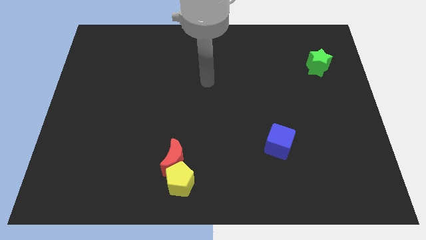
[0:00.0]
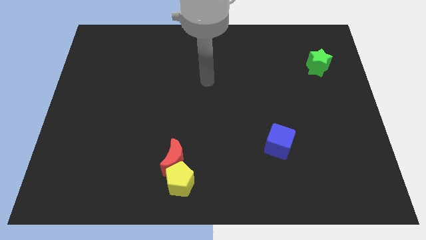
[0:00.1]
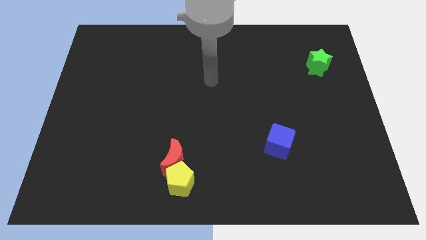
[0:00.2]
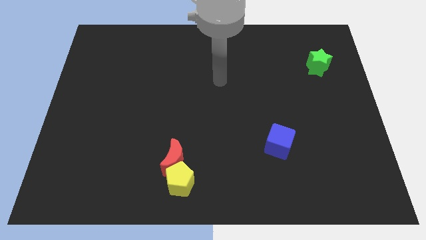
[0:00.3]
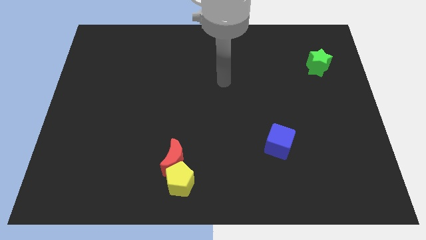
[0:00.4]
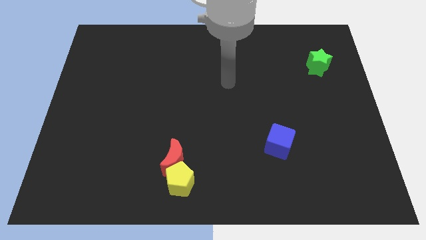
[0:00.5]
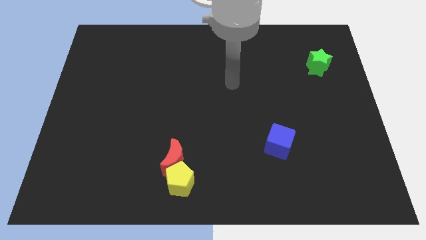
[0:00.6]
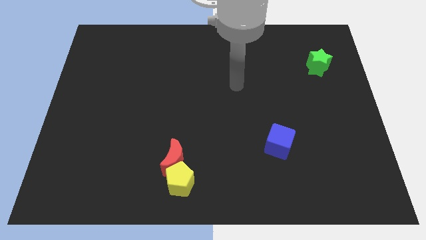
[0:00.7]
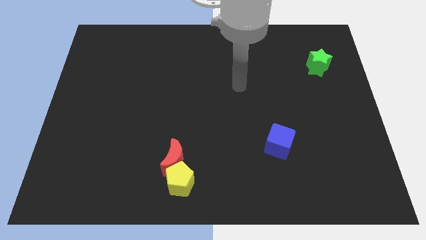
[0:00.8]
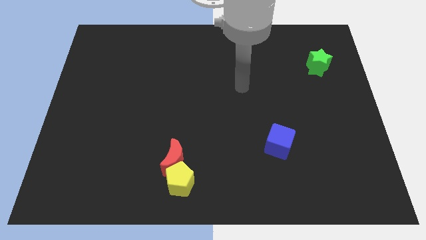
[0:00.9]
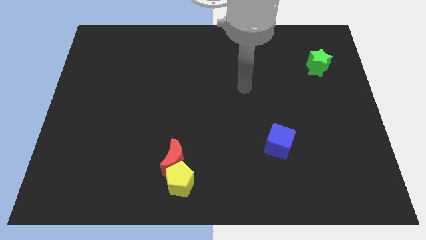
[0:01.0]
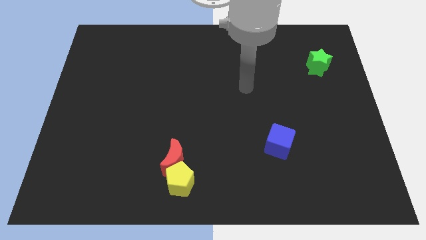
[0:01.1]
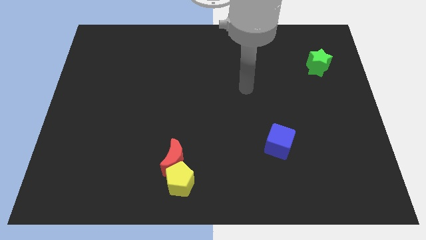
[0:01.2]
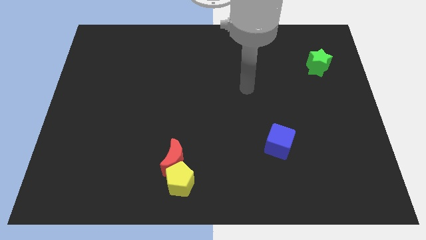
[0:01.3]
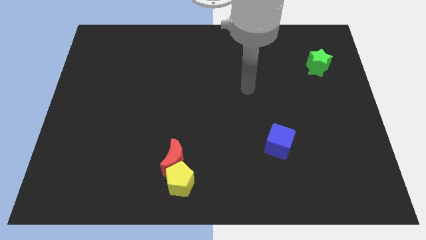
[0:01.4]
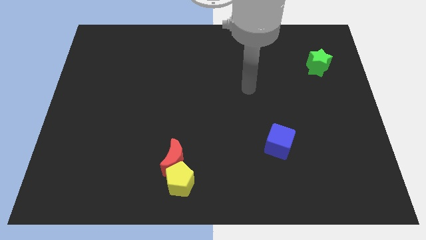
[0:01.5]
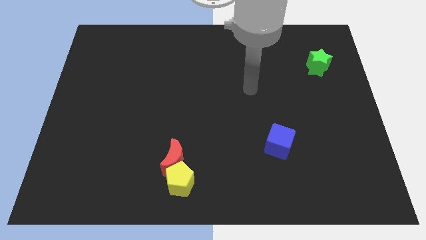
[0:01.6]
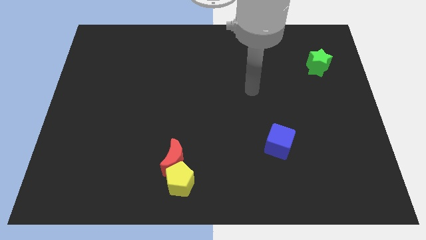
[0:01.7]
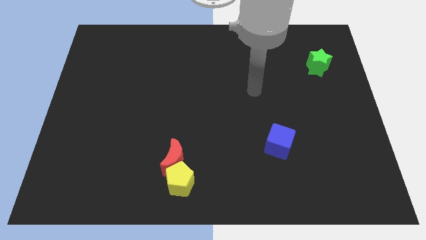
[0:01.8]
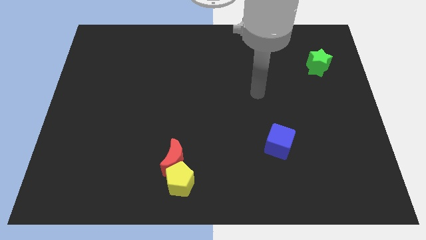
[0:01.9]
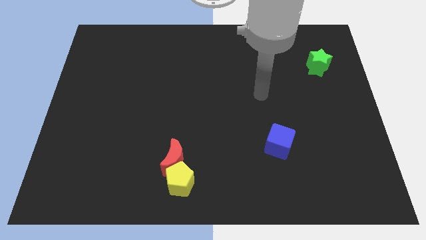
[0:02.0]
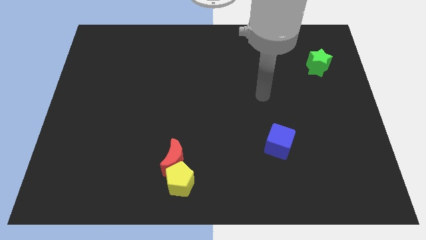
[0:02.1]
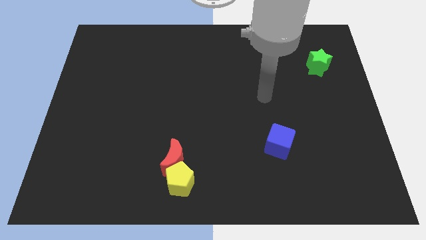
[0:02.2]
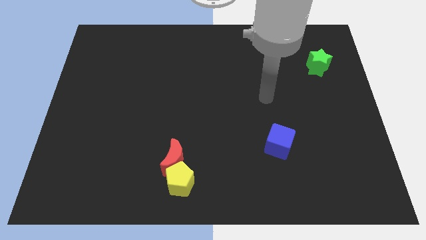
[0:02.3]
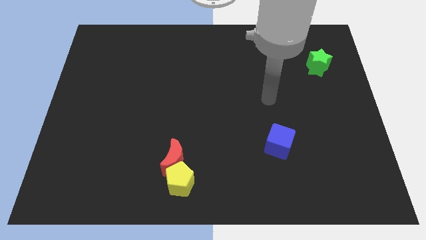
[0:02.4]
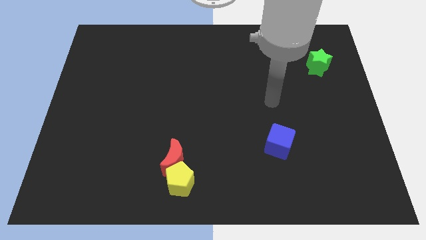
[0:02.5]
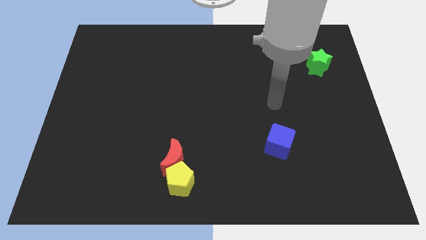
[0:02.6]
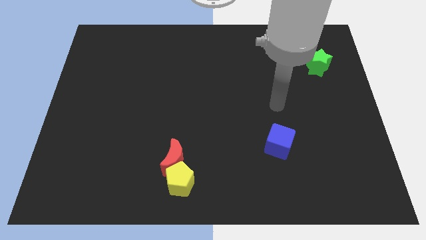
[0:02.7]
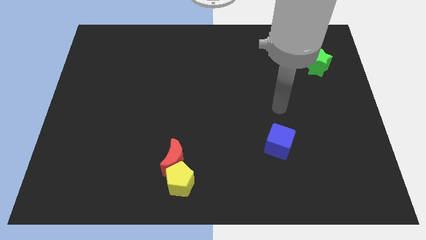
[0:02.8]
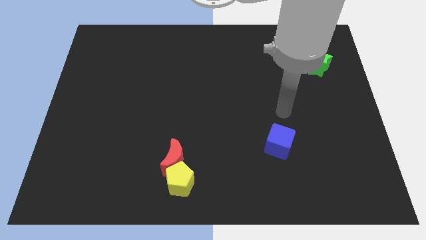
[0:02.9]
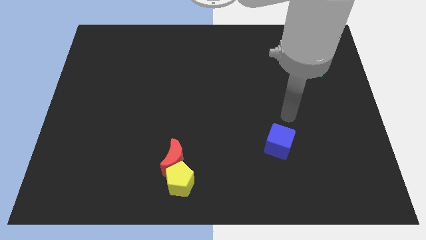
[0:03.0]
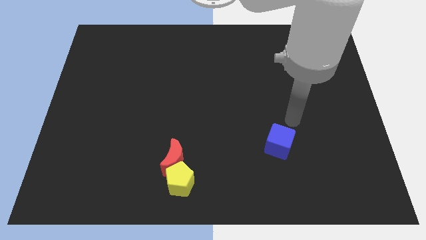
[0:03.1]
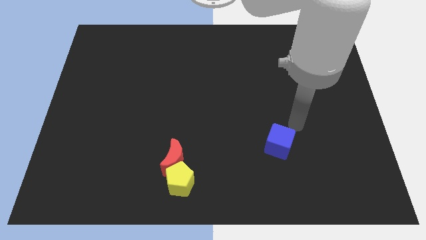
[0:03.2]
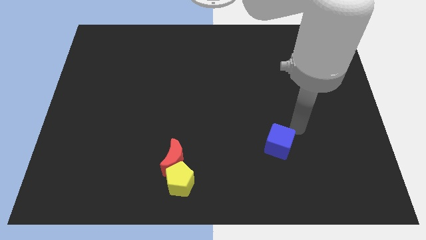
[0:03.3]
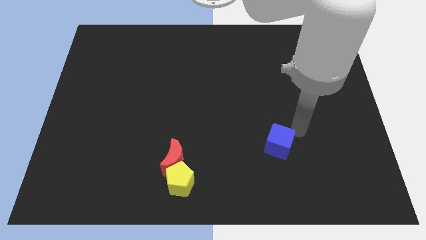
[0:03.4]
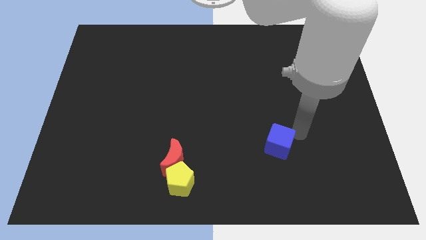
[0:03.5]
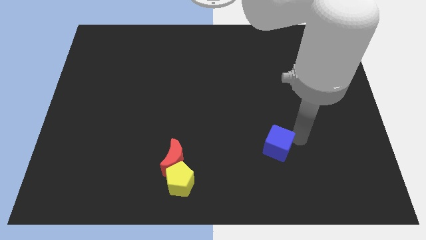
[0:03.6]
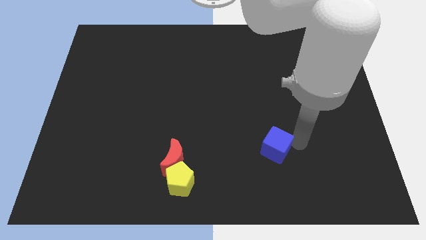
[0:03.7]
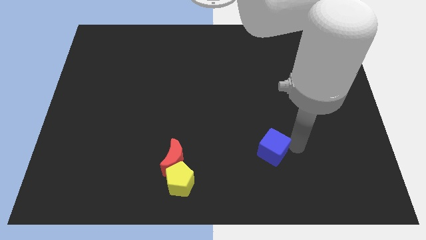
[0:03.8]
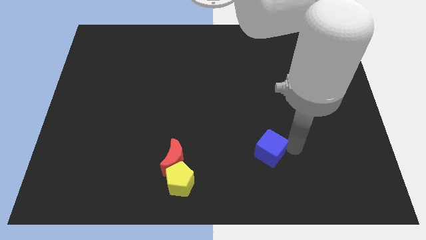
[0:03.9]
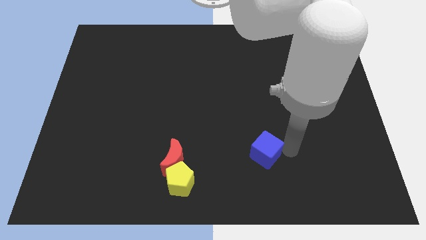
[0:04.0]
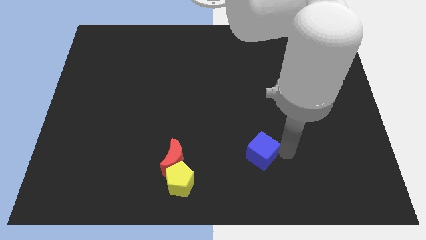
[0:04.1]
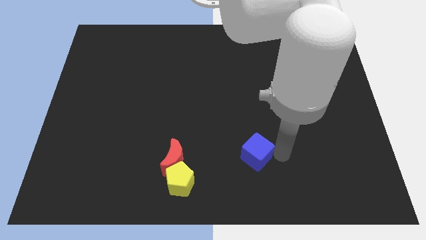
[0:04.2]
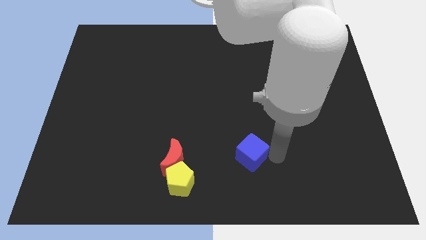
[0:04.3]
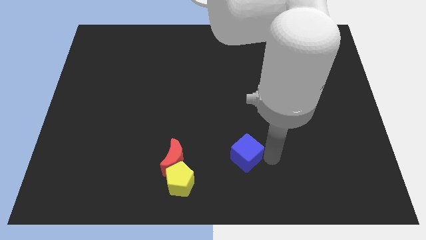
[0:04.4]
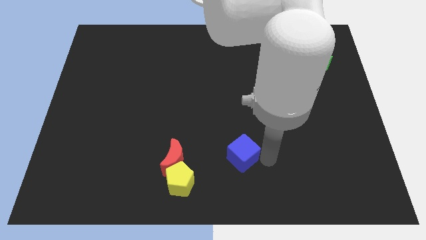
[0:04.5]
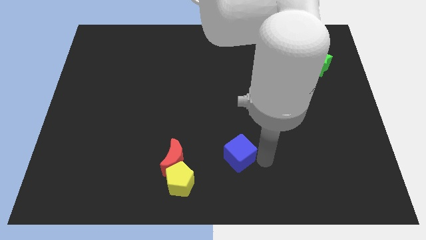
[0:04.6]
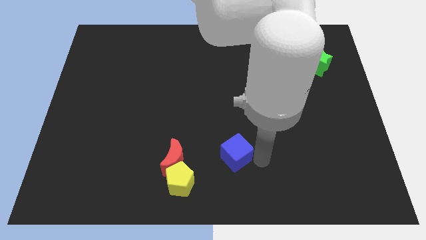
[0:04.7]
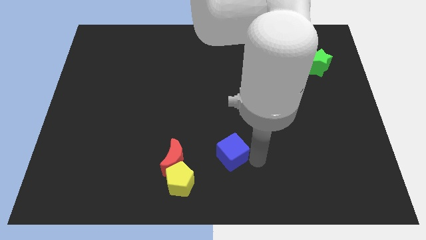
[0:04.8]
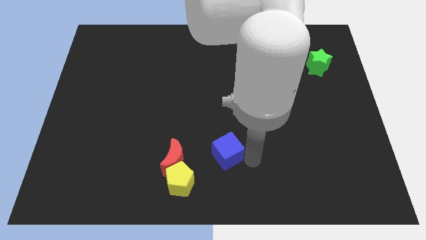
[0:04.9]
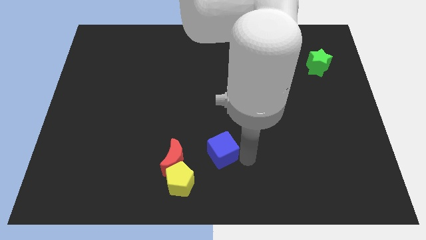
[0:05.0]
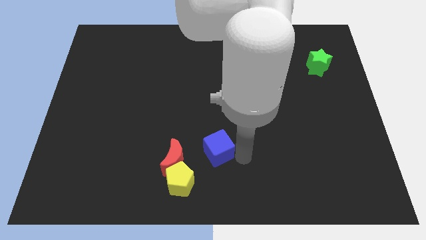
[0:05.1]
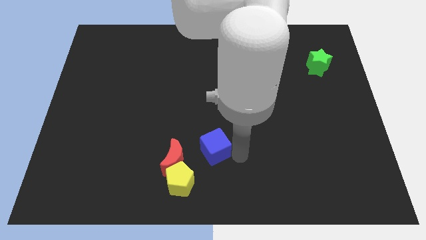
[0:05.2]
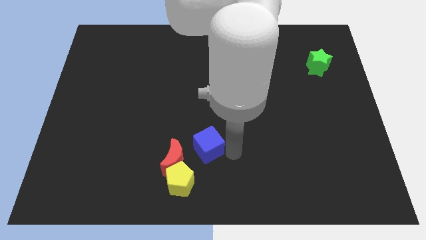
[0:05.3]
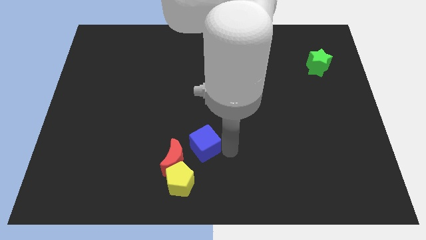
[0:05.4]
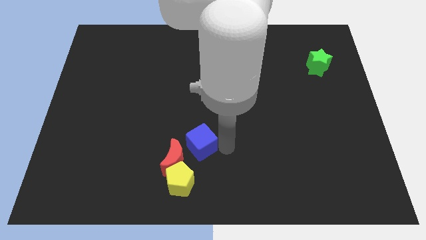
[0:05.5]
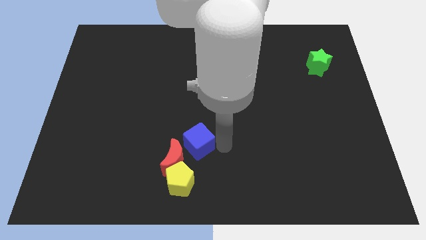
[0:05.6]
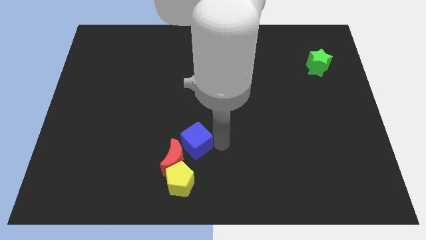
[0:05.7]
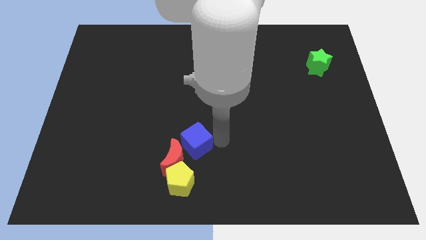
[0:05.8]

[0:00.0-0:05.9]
put the cube next to the red block

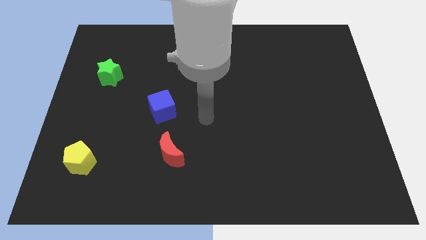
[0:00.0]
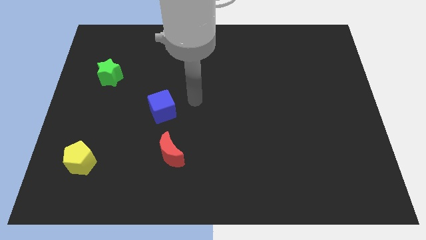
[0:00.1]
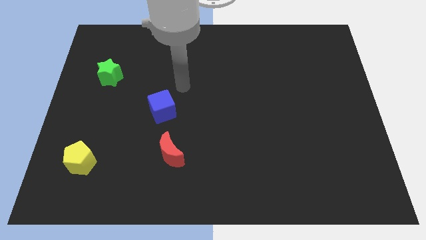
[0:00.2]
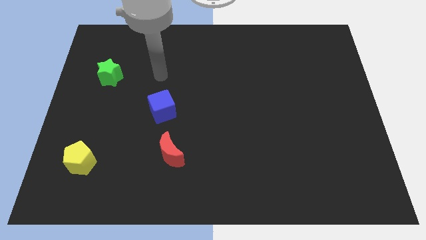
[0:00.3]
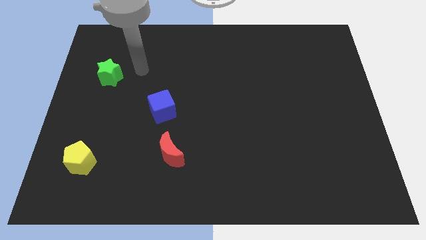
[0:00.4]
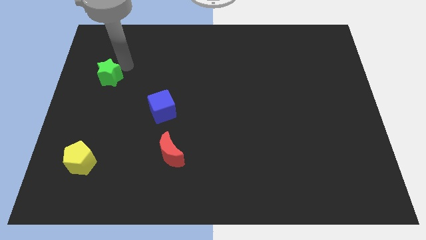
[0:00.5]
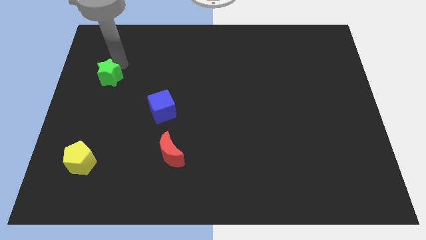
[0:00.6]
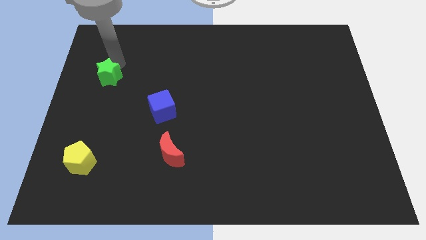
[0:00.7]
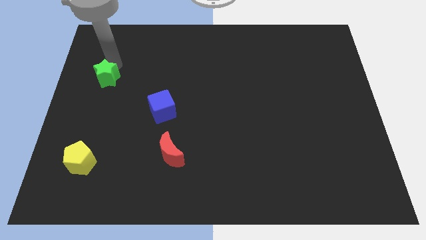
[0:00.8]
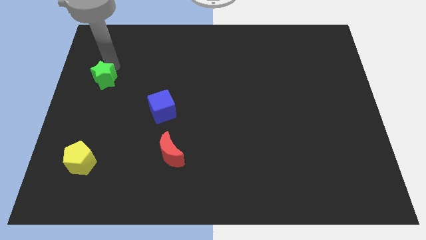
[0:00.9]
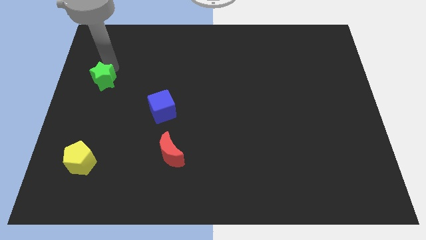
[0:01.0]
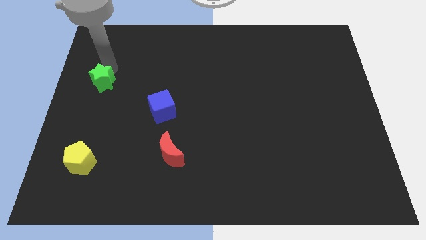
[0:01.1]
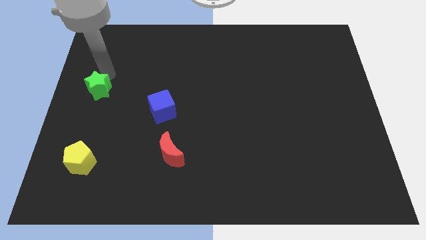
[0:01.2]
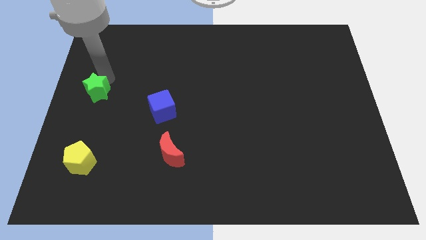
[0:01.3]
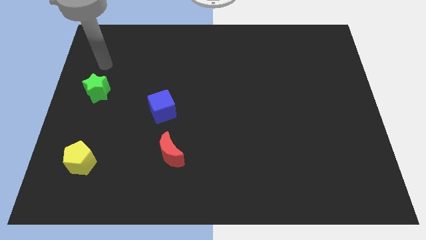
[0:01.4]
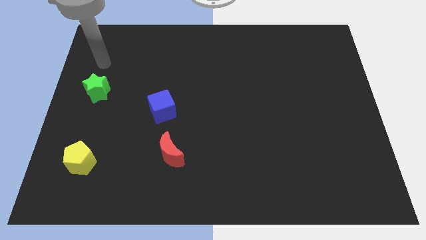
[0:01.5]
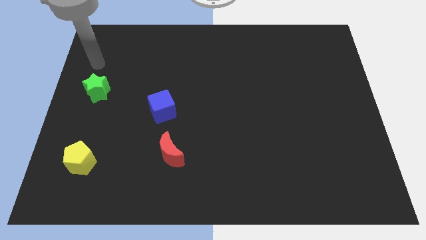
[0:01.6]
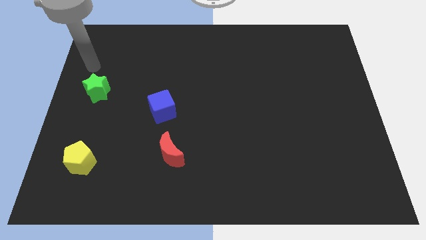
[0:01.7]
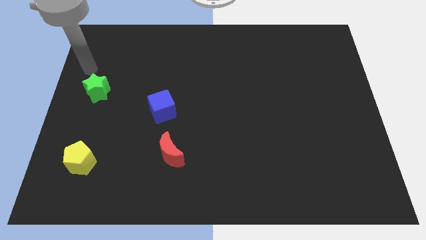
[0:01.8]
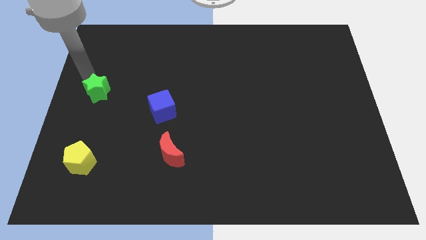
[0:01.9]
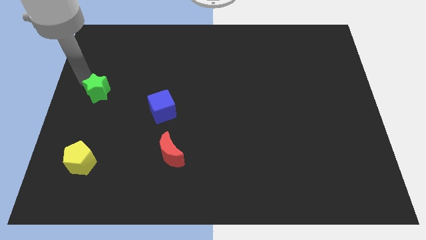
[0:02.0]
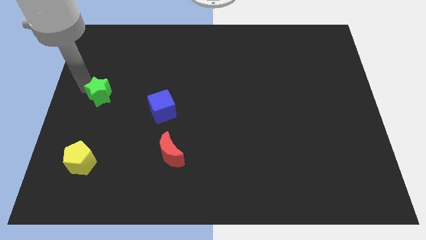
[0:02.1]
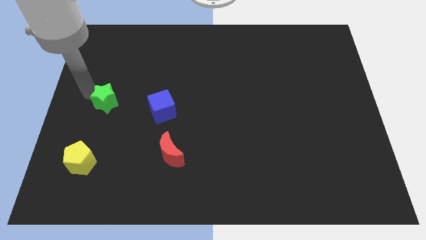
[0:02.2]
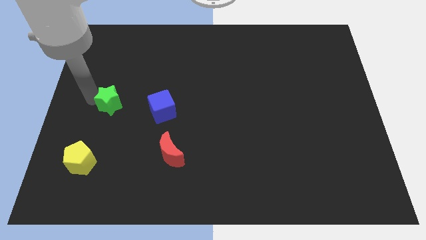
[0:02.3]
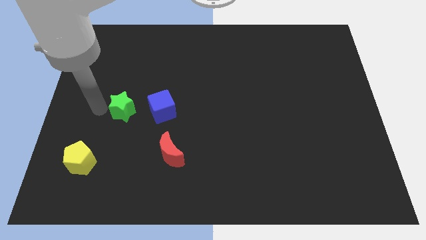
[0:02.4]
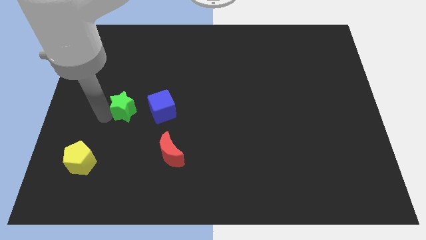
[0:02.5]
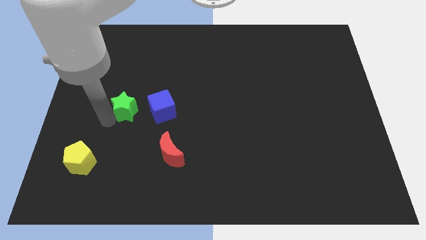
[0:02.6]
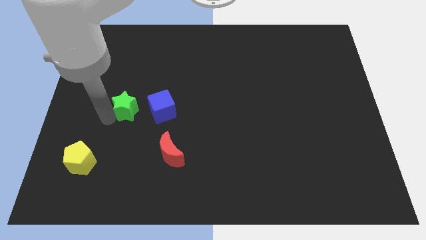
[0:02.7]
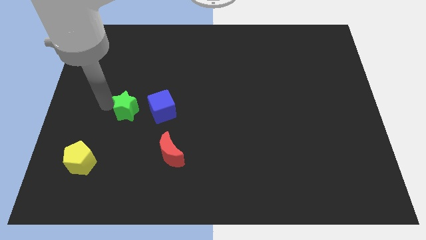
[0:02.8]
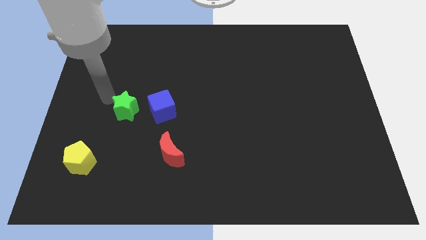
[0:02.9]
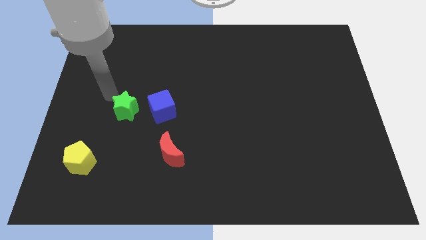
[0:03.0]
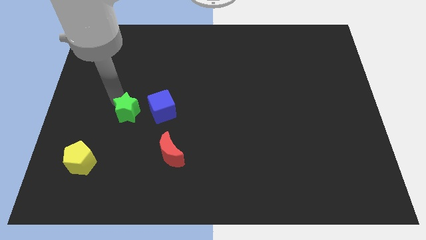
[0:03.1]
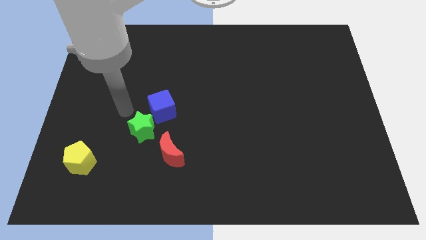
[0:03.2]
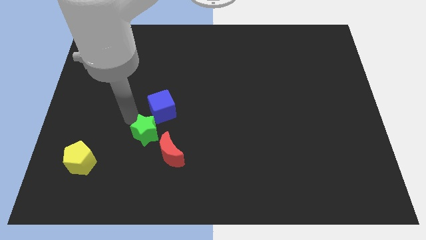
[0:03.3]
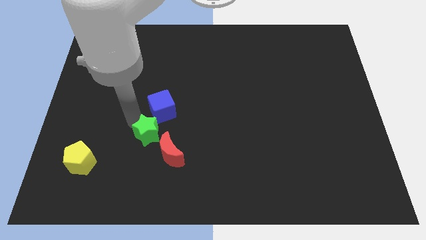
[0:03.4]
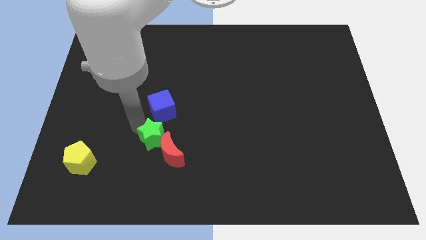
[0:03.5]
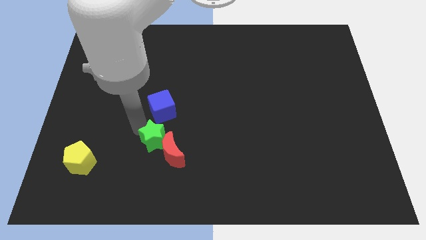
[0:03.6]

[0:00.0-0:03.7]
put the green block close to the red moon
